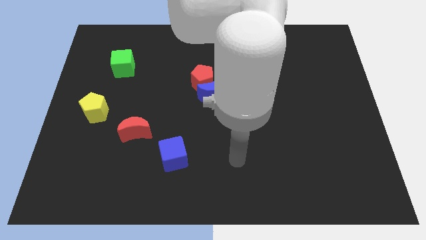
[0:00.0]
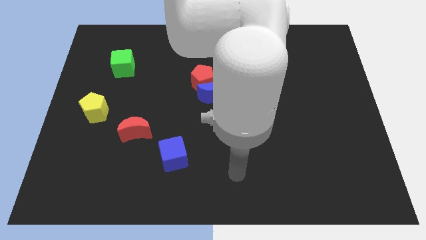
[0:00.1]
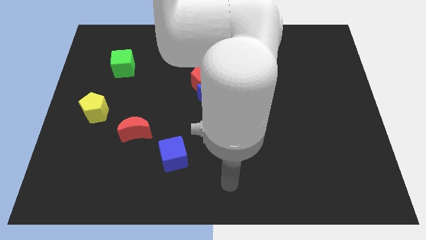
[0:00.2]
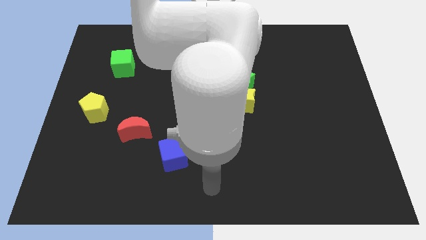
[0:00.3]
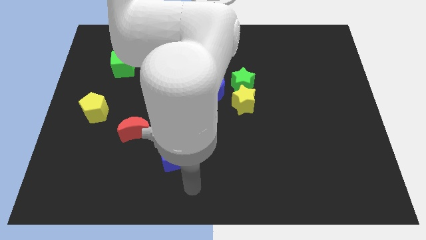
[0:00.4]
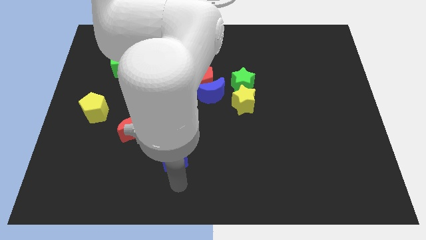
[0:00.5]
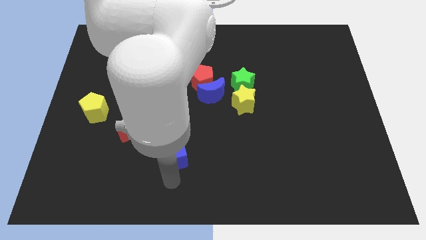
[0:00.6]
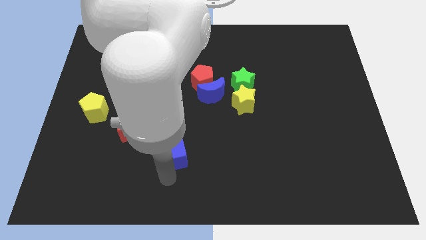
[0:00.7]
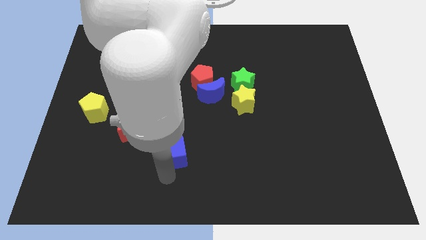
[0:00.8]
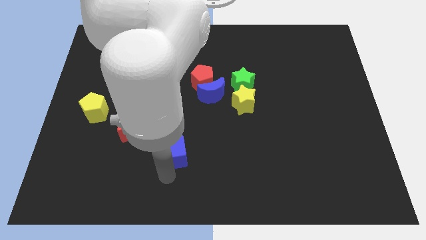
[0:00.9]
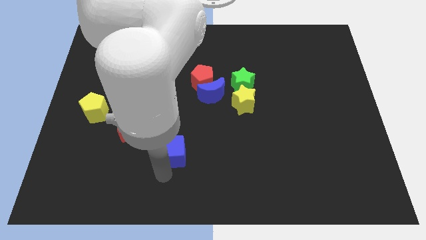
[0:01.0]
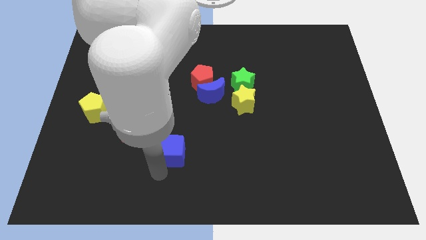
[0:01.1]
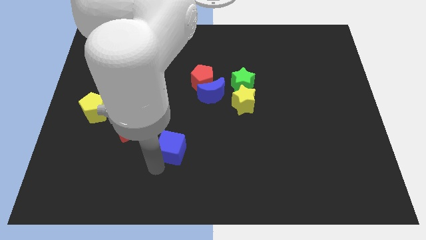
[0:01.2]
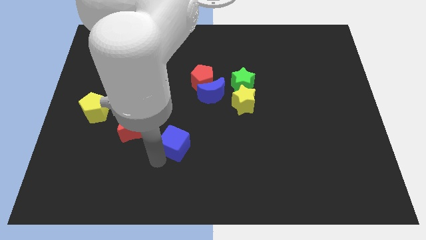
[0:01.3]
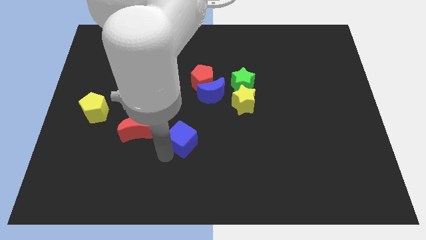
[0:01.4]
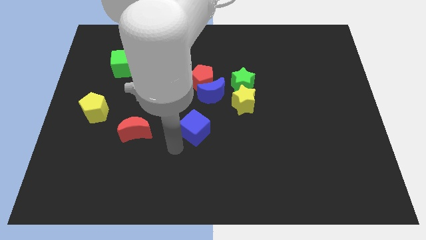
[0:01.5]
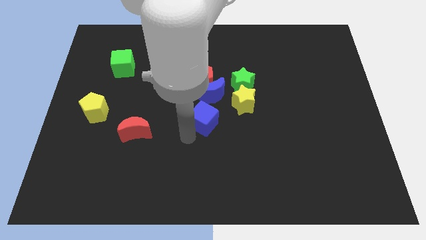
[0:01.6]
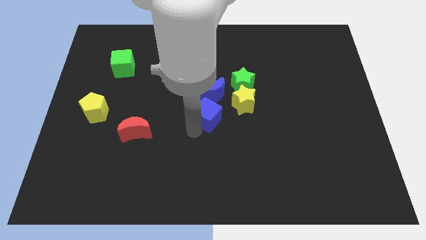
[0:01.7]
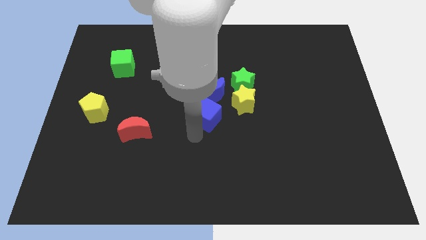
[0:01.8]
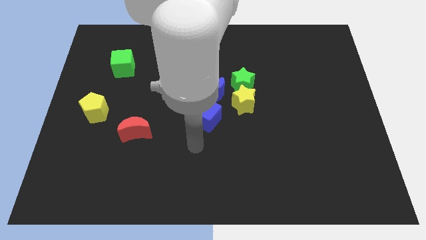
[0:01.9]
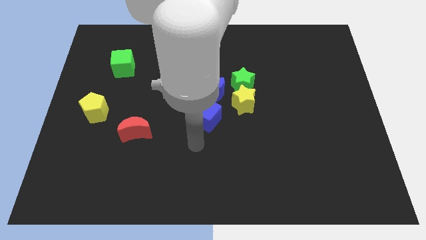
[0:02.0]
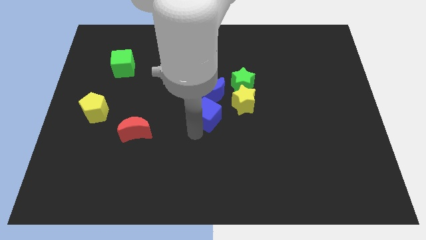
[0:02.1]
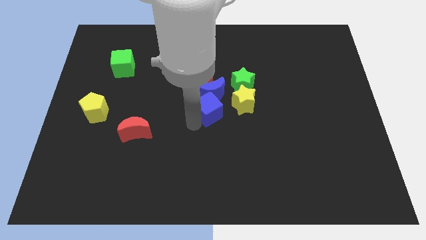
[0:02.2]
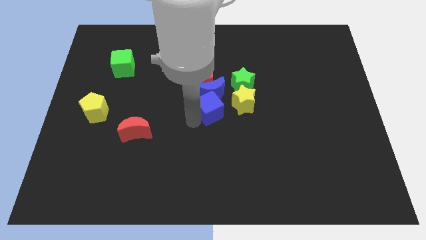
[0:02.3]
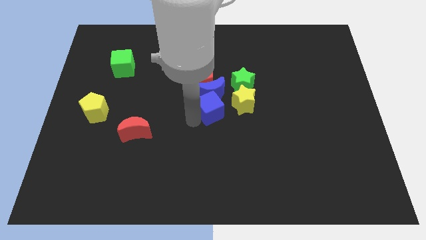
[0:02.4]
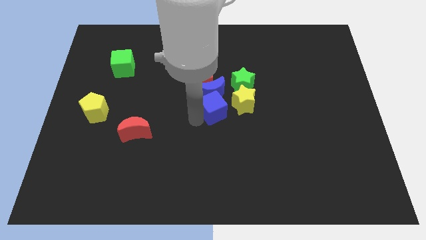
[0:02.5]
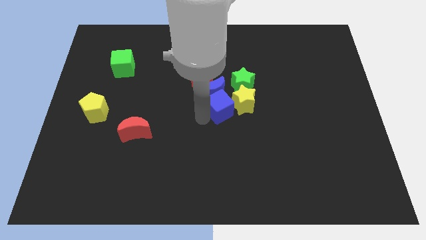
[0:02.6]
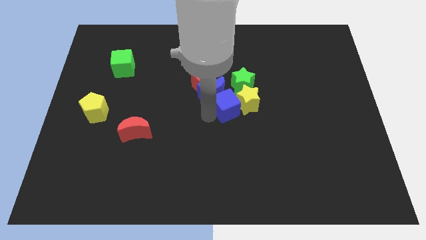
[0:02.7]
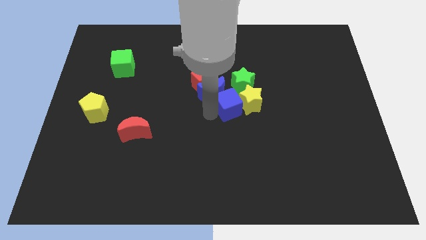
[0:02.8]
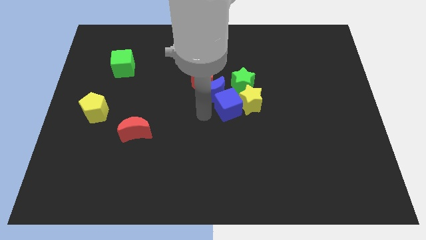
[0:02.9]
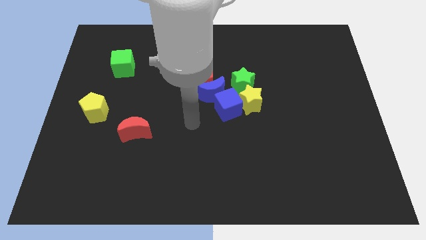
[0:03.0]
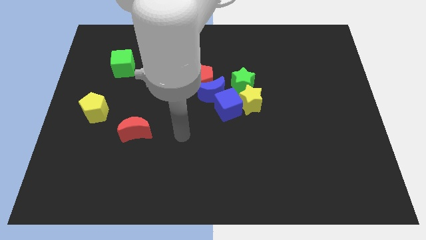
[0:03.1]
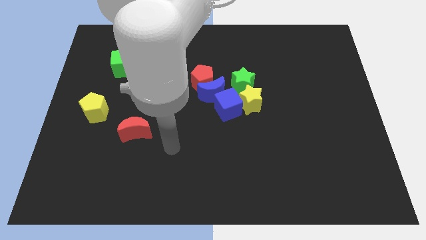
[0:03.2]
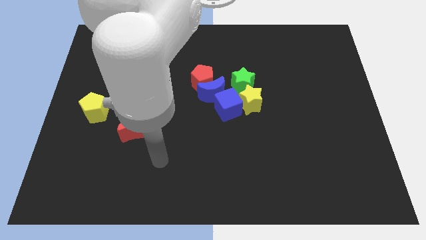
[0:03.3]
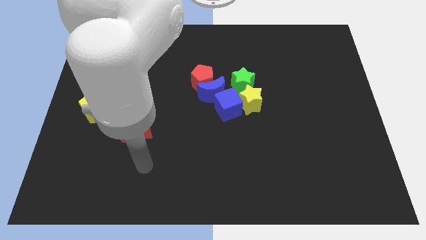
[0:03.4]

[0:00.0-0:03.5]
push the yellow star with the blue cube

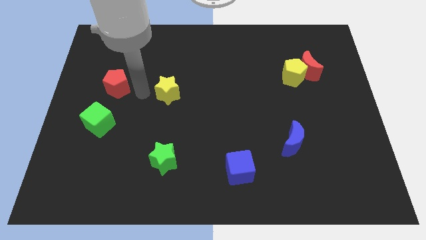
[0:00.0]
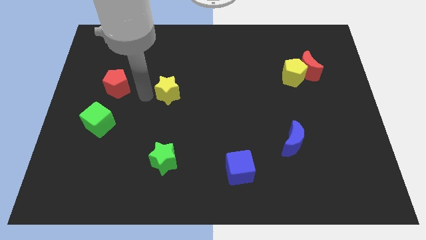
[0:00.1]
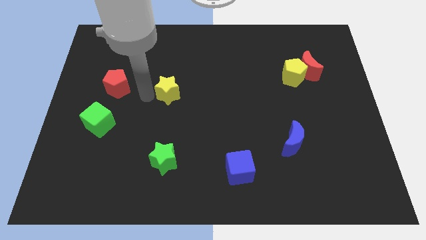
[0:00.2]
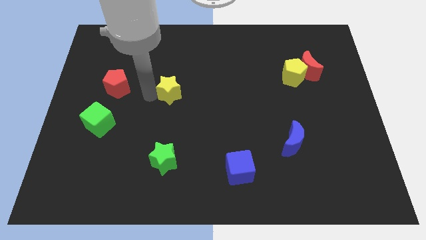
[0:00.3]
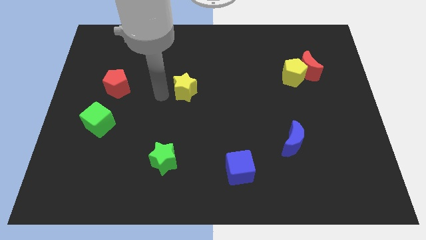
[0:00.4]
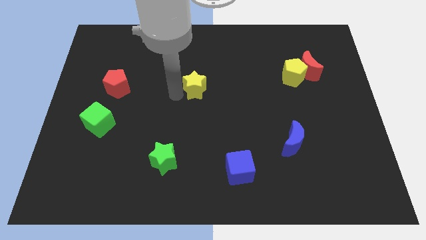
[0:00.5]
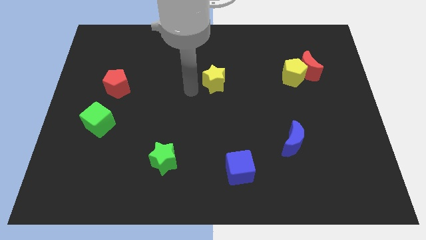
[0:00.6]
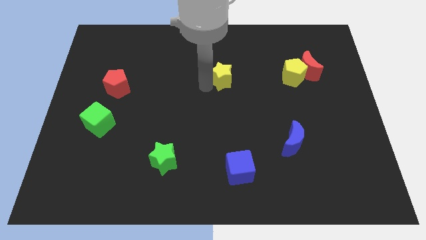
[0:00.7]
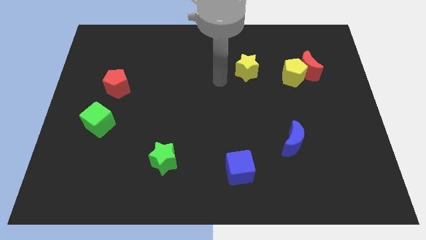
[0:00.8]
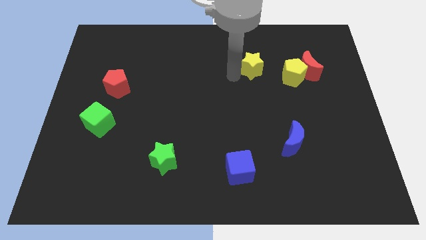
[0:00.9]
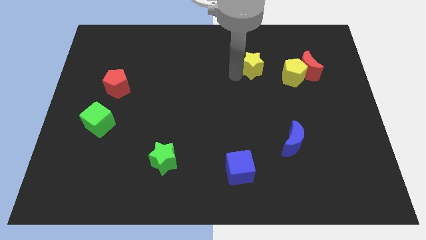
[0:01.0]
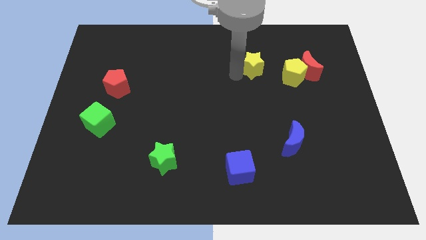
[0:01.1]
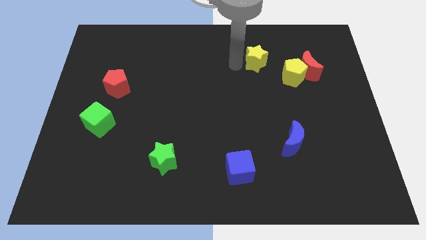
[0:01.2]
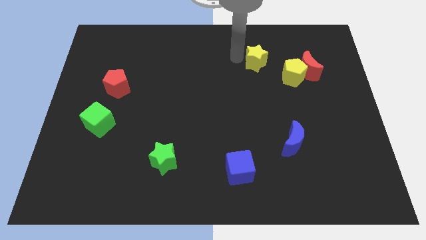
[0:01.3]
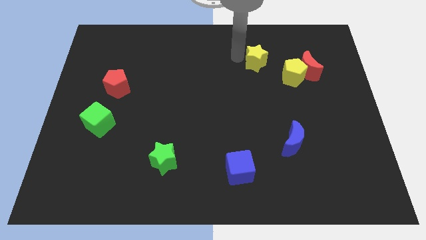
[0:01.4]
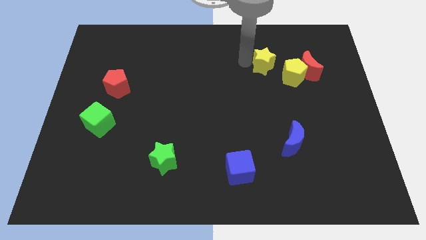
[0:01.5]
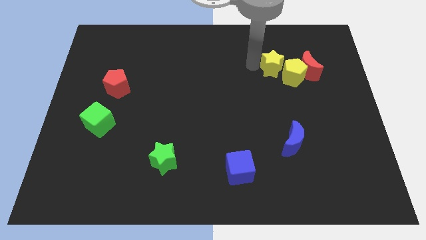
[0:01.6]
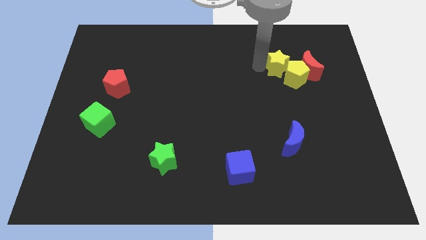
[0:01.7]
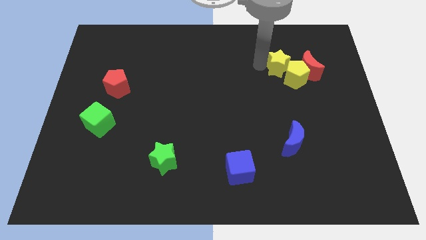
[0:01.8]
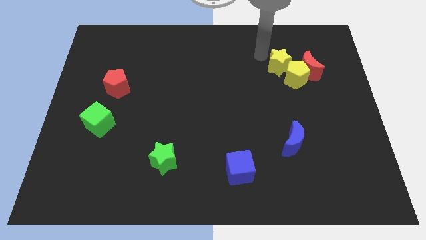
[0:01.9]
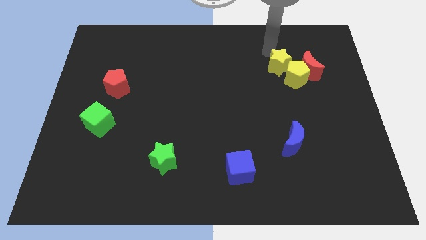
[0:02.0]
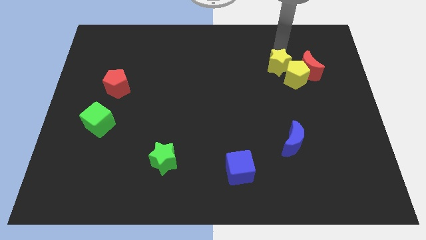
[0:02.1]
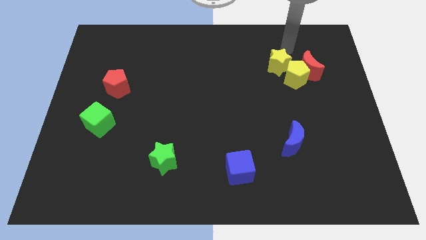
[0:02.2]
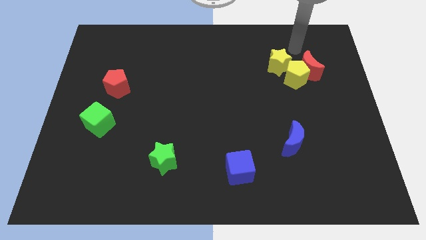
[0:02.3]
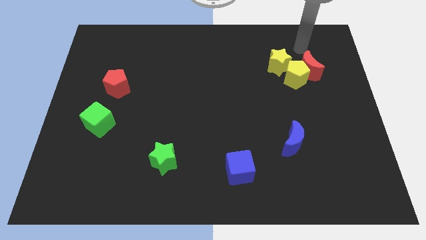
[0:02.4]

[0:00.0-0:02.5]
push the yellow star into the top left side of the yellow pentagon

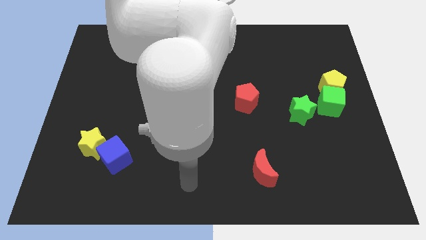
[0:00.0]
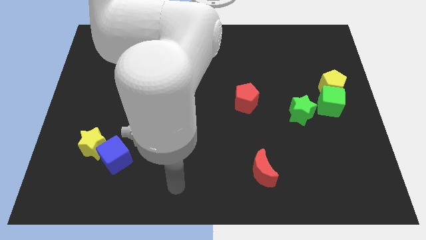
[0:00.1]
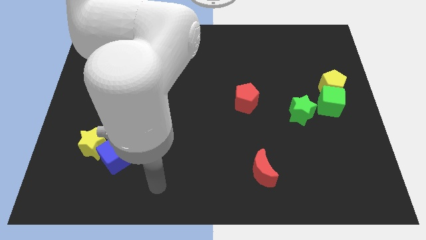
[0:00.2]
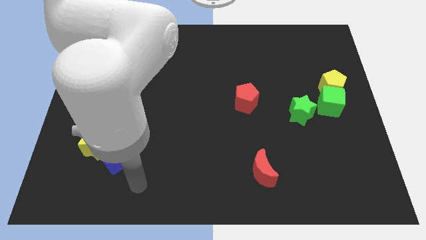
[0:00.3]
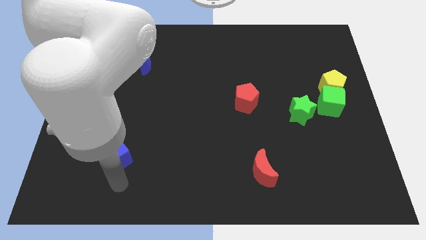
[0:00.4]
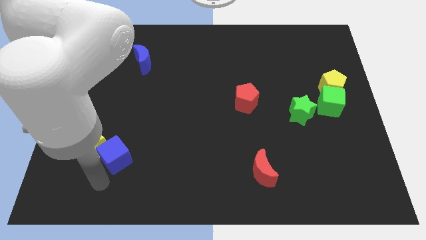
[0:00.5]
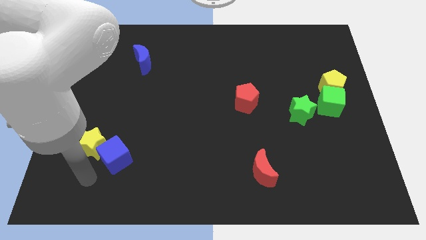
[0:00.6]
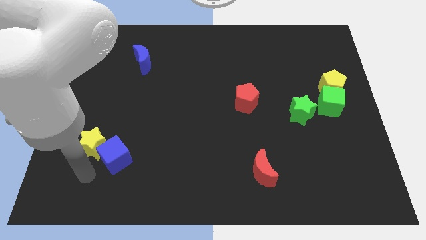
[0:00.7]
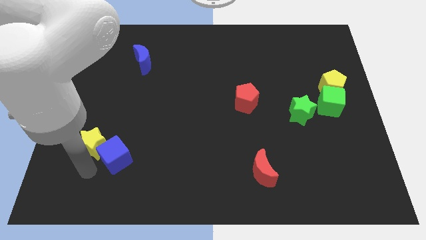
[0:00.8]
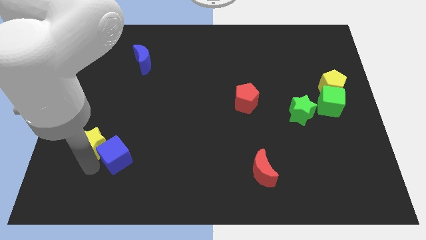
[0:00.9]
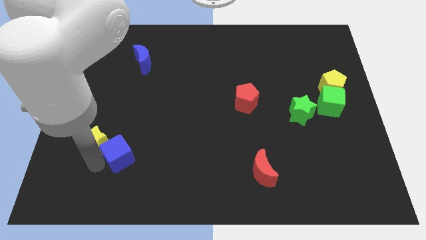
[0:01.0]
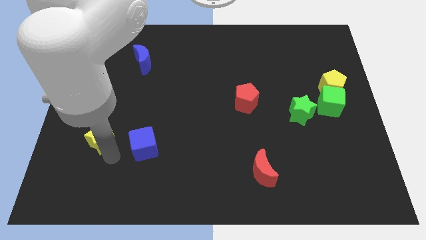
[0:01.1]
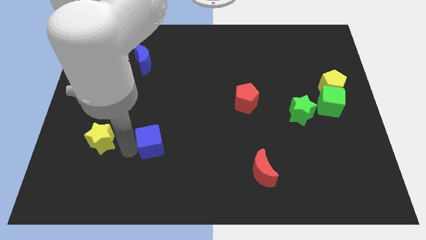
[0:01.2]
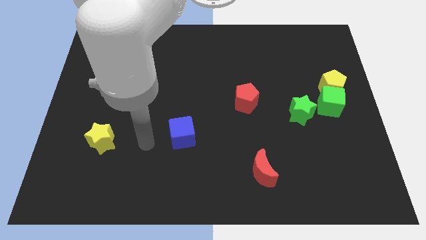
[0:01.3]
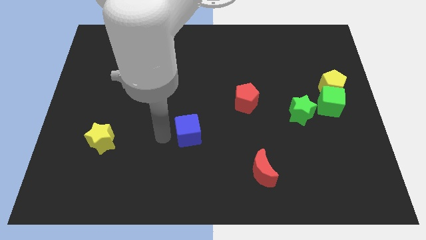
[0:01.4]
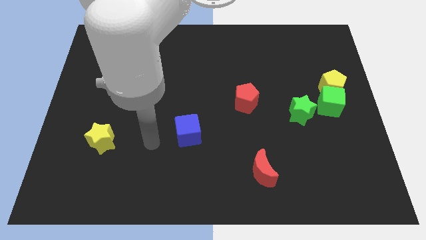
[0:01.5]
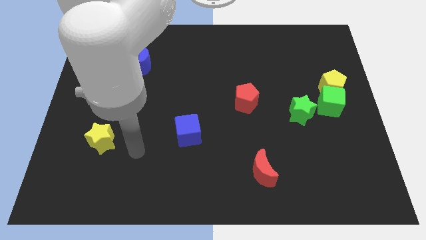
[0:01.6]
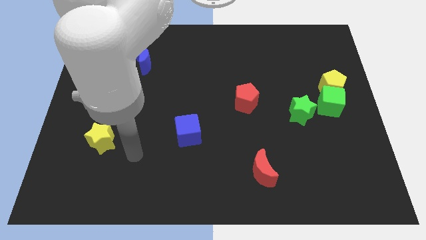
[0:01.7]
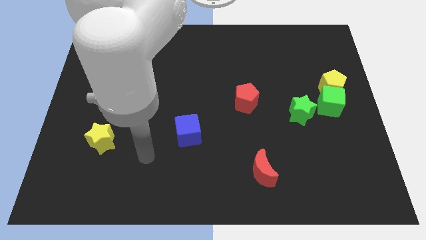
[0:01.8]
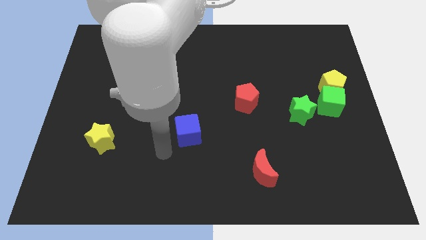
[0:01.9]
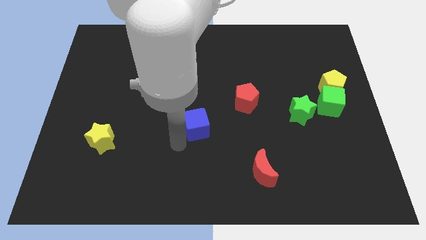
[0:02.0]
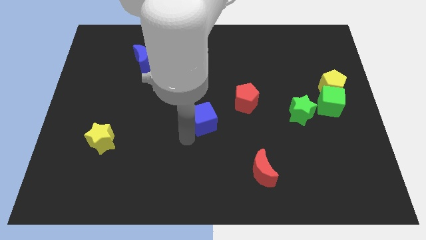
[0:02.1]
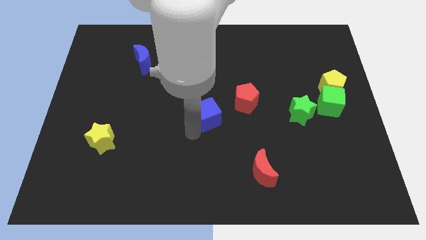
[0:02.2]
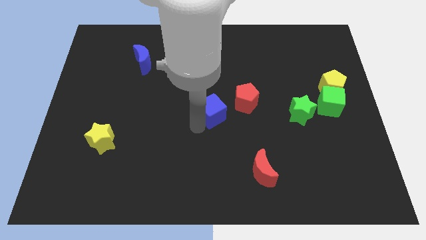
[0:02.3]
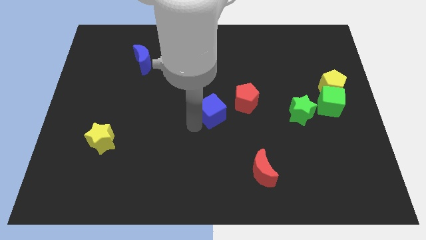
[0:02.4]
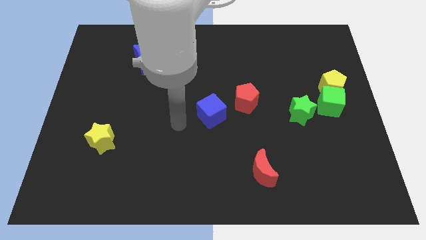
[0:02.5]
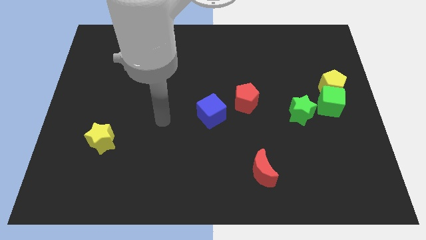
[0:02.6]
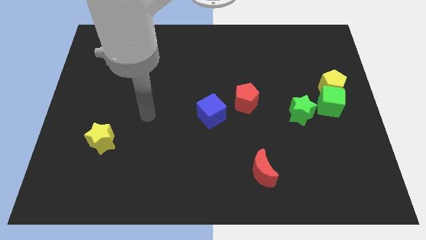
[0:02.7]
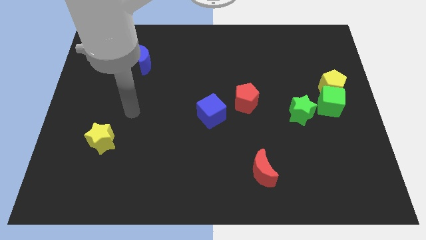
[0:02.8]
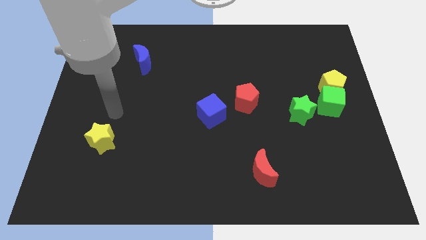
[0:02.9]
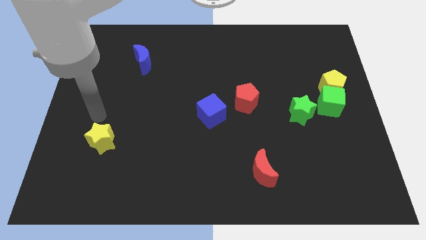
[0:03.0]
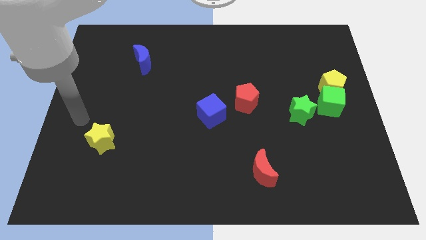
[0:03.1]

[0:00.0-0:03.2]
place the blue cube diagonally bottom right to the blue moon
